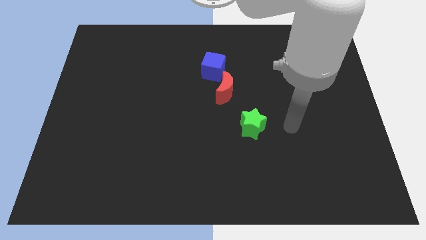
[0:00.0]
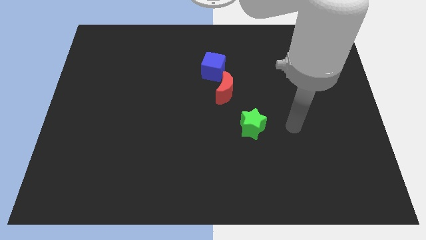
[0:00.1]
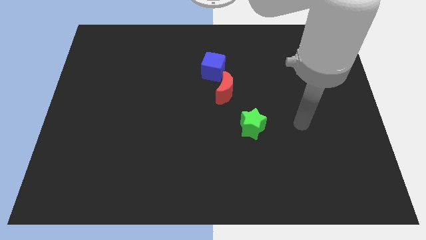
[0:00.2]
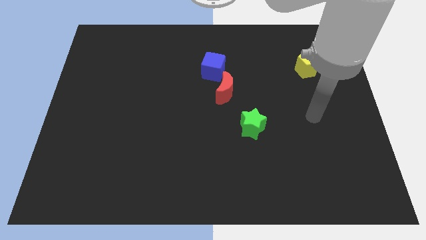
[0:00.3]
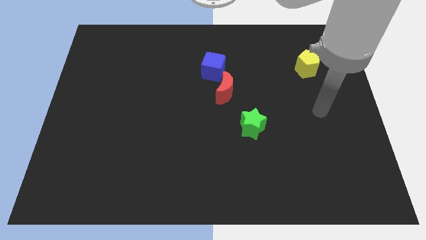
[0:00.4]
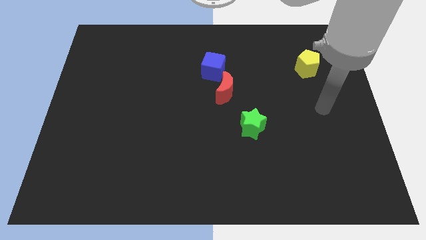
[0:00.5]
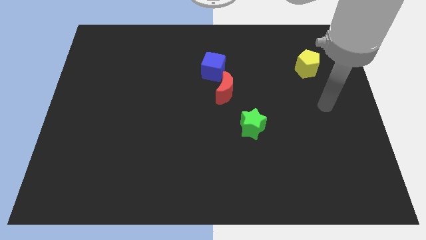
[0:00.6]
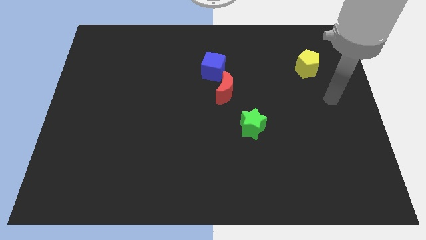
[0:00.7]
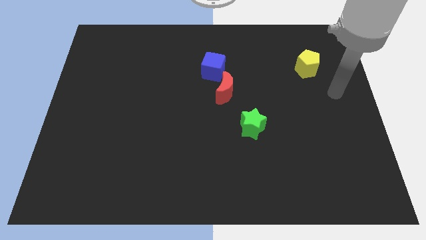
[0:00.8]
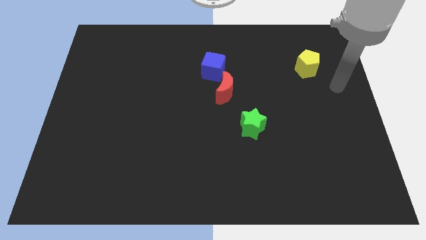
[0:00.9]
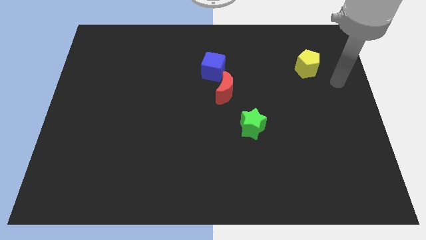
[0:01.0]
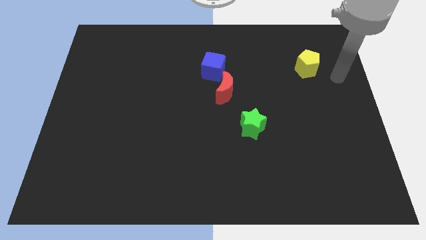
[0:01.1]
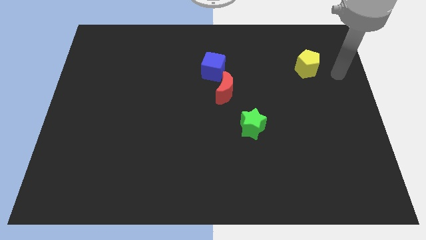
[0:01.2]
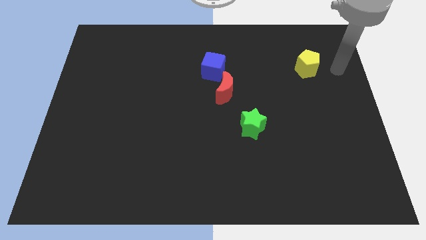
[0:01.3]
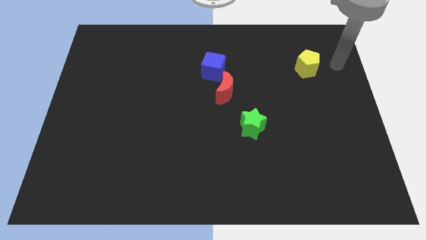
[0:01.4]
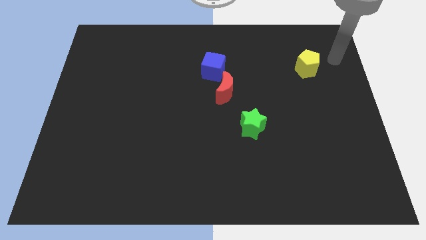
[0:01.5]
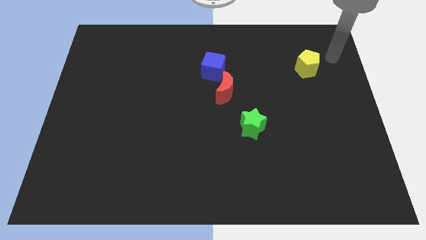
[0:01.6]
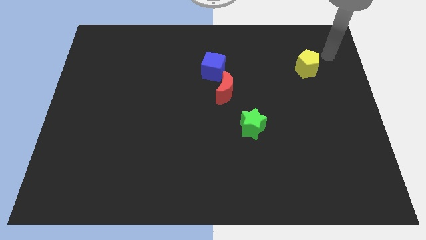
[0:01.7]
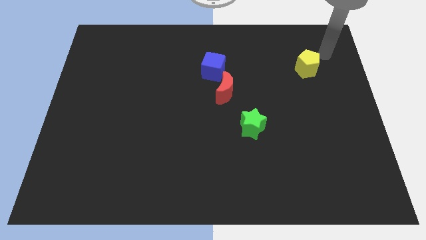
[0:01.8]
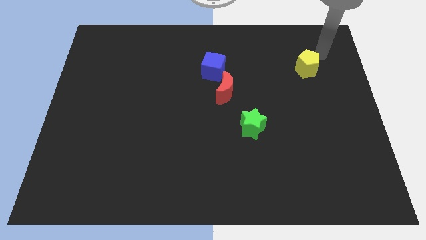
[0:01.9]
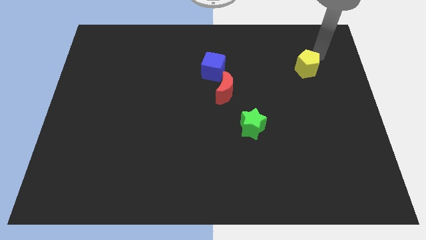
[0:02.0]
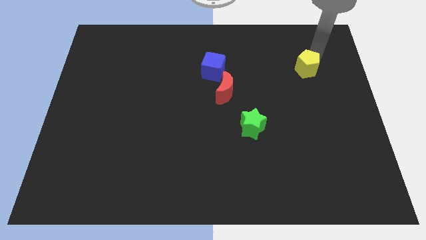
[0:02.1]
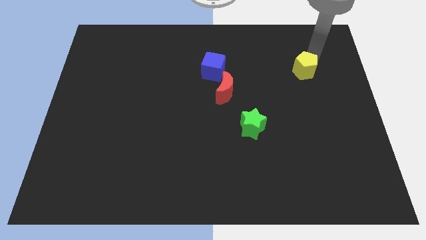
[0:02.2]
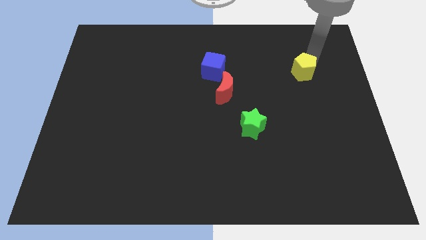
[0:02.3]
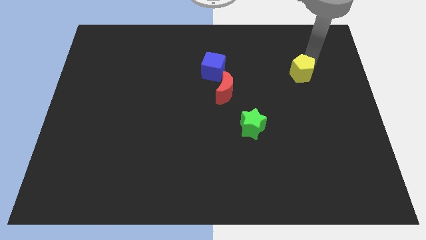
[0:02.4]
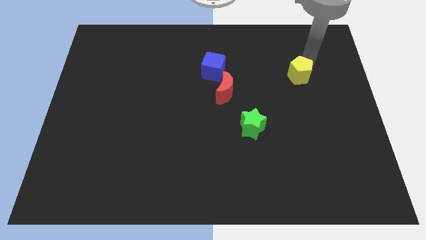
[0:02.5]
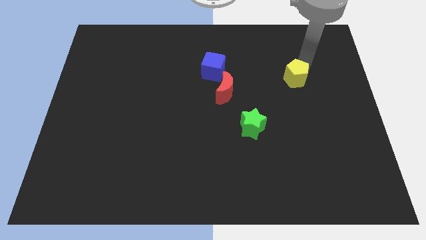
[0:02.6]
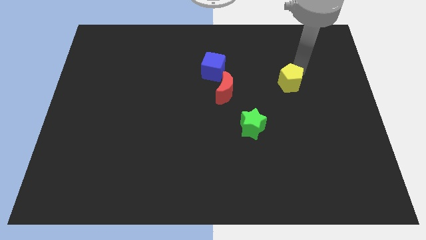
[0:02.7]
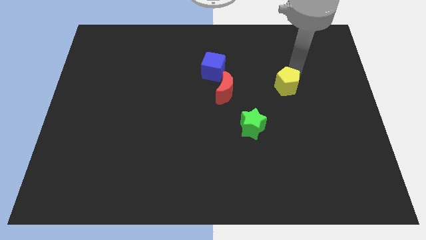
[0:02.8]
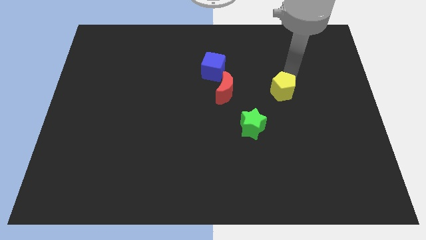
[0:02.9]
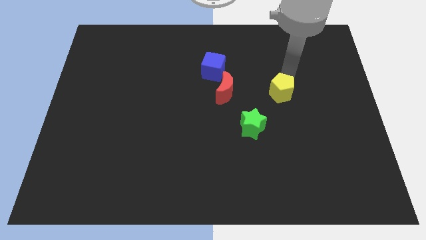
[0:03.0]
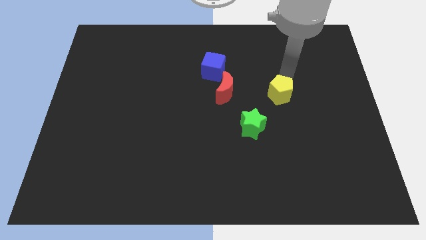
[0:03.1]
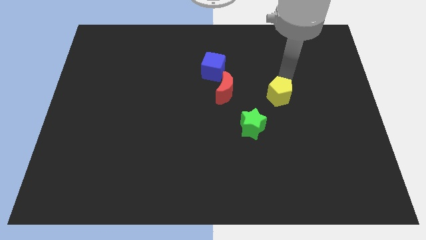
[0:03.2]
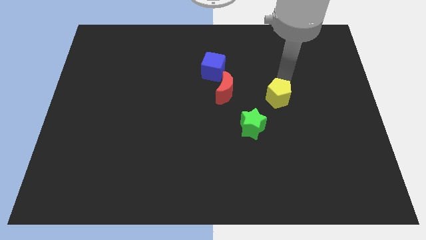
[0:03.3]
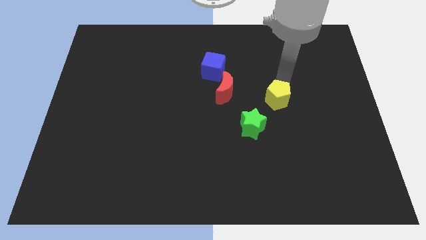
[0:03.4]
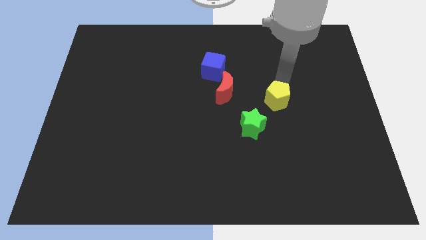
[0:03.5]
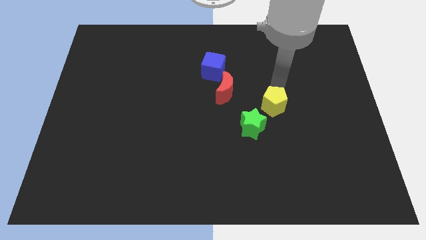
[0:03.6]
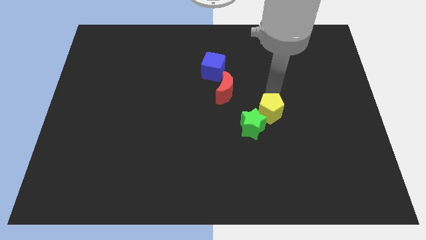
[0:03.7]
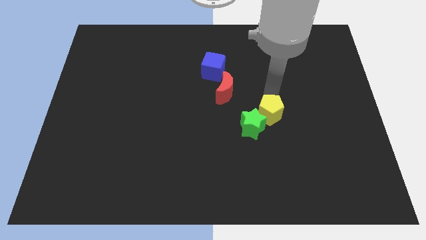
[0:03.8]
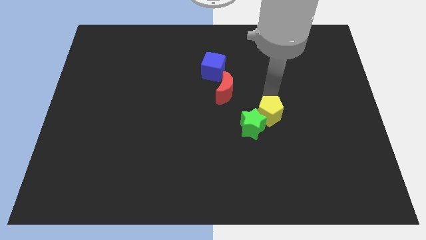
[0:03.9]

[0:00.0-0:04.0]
move the yellow block next to the star

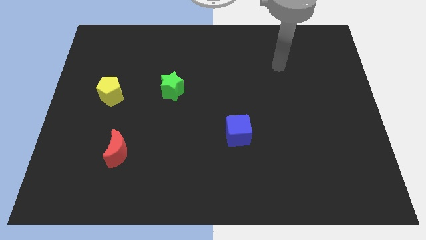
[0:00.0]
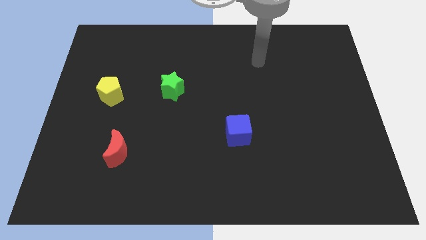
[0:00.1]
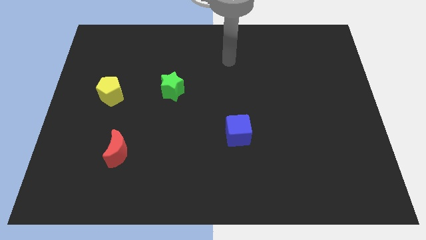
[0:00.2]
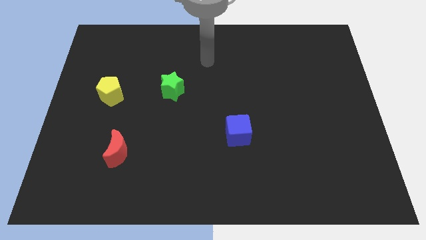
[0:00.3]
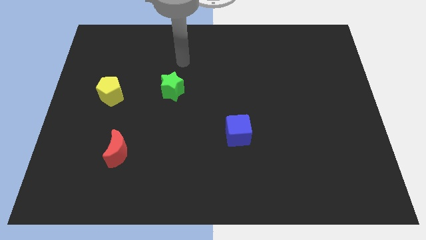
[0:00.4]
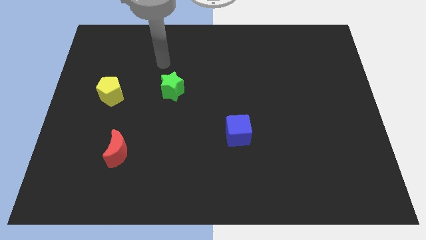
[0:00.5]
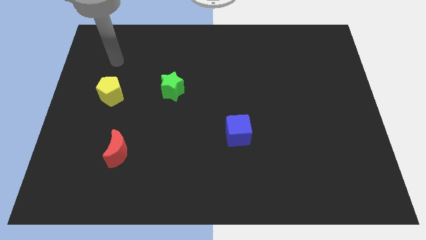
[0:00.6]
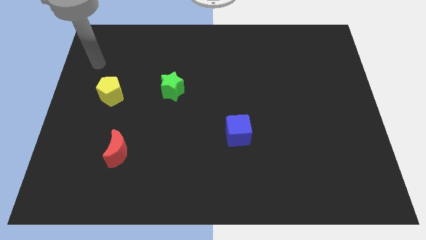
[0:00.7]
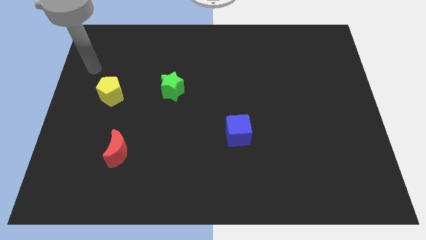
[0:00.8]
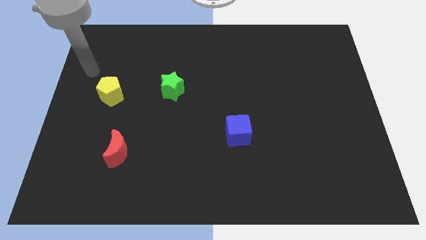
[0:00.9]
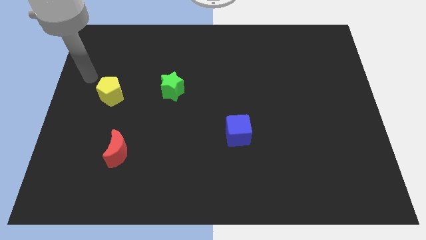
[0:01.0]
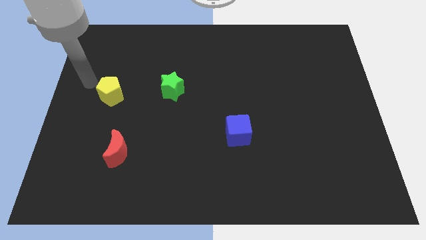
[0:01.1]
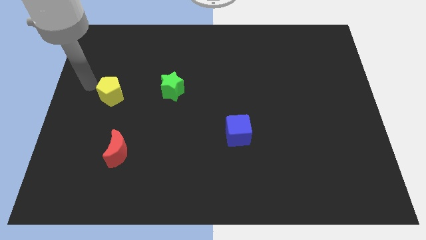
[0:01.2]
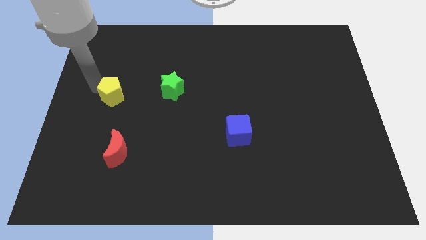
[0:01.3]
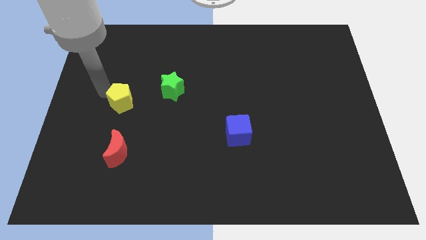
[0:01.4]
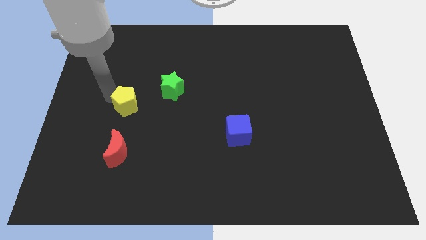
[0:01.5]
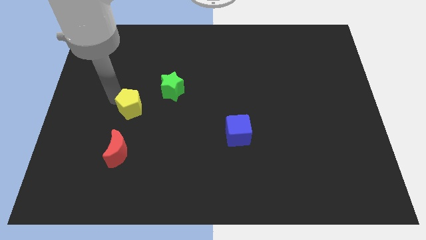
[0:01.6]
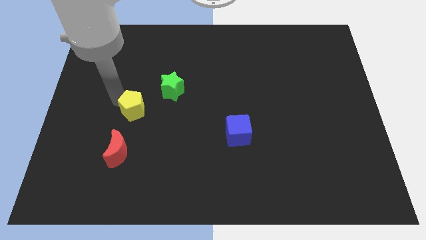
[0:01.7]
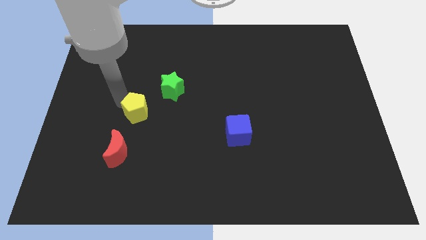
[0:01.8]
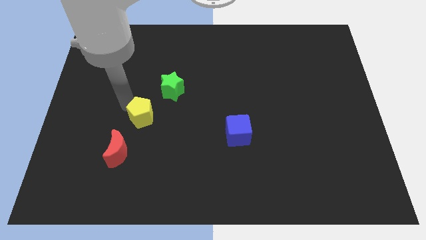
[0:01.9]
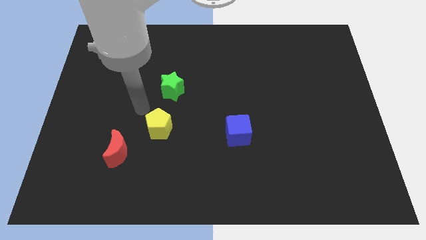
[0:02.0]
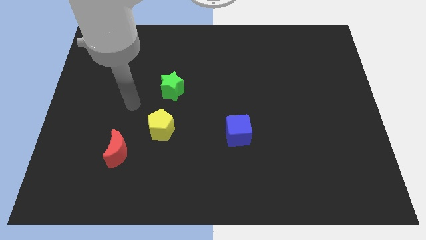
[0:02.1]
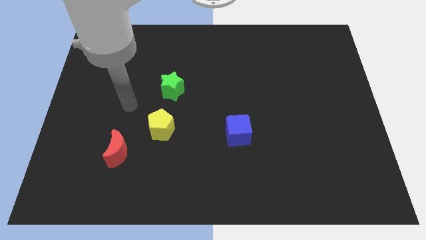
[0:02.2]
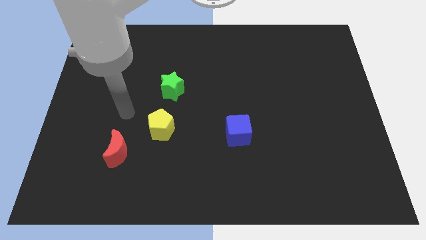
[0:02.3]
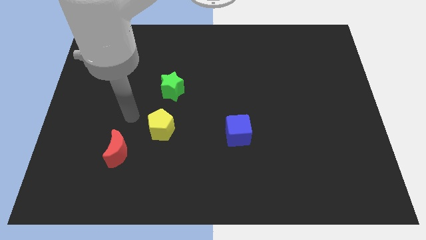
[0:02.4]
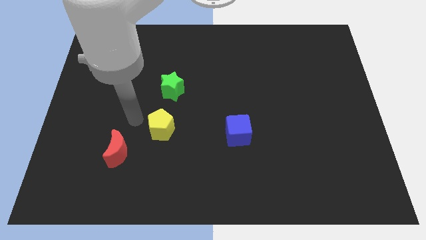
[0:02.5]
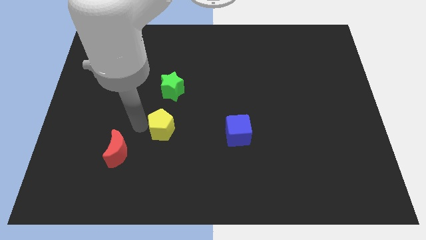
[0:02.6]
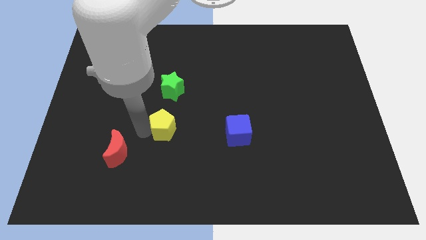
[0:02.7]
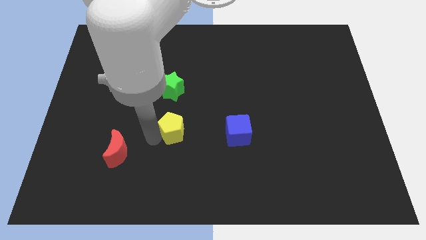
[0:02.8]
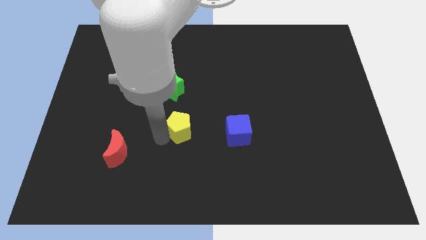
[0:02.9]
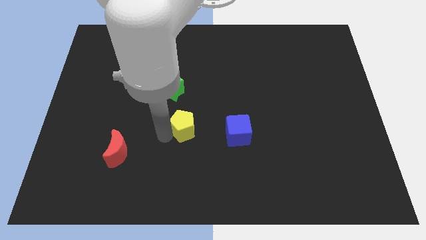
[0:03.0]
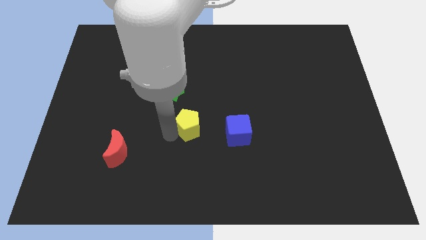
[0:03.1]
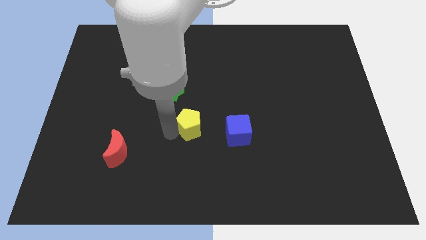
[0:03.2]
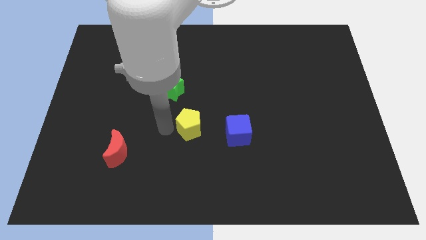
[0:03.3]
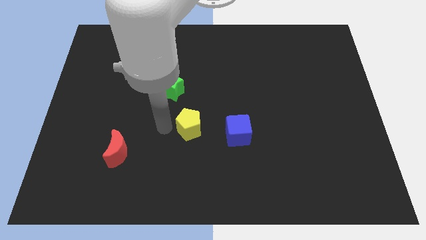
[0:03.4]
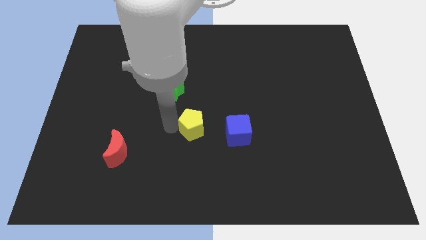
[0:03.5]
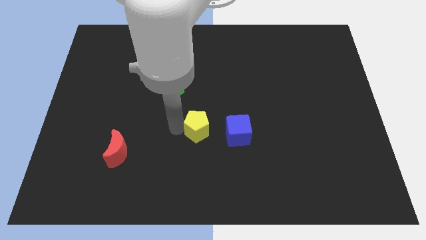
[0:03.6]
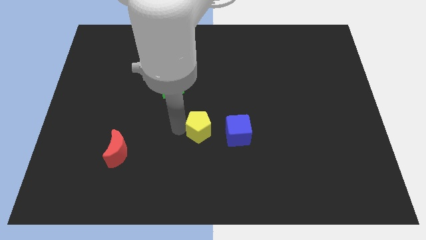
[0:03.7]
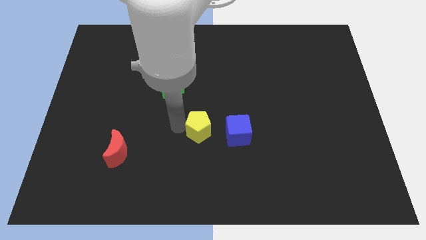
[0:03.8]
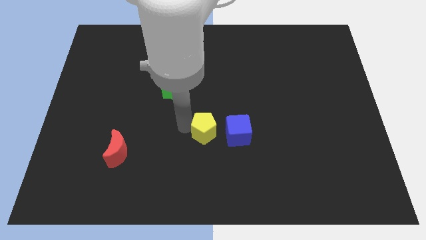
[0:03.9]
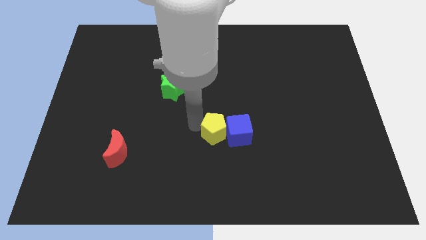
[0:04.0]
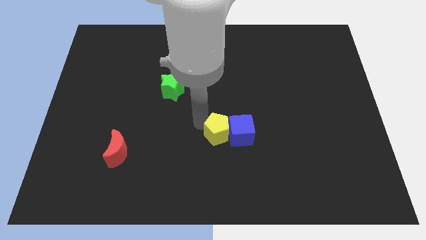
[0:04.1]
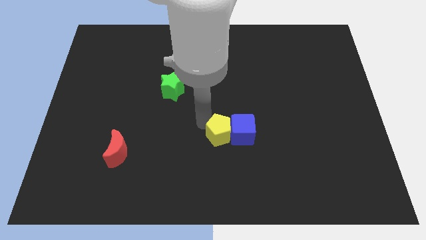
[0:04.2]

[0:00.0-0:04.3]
put the yellow pentagon close to the cube

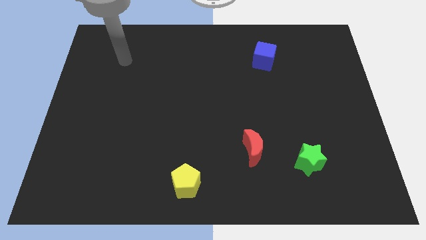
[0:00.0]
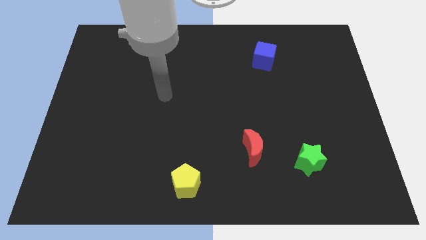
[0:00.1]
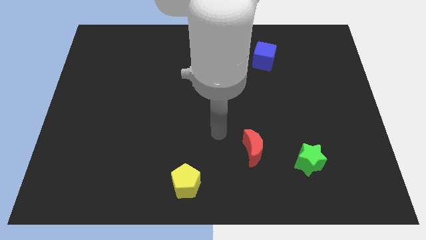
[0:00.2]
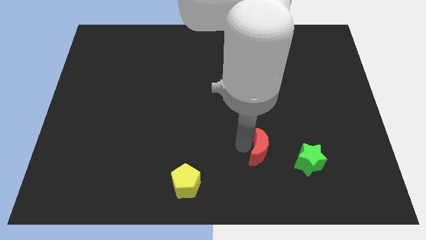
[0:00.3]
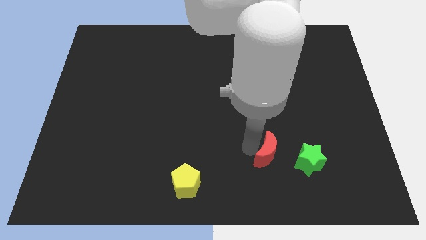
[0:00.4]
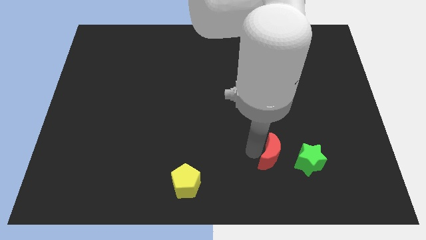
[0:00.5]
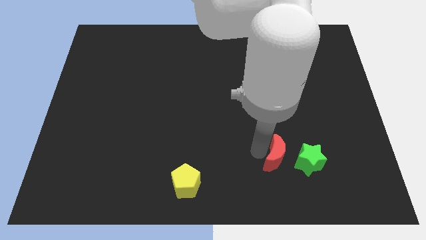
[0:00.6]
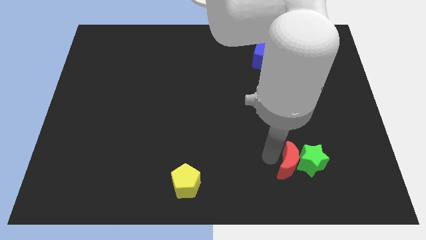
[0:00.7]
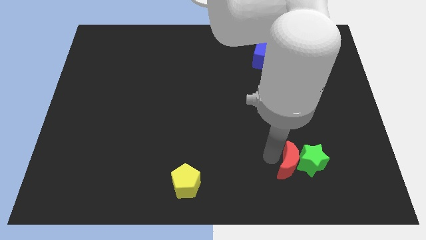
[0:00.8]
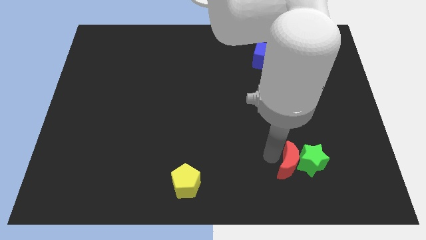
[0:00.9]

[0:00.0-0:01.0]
put the red block to the green block
